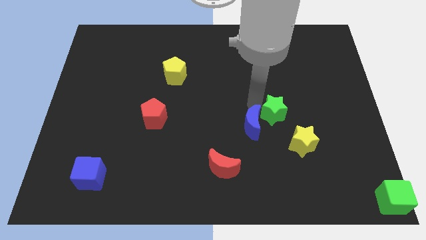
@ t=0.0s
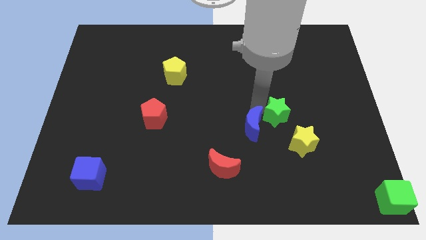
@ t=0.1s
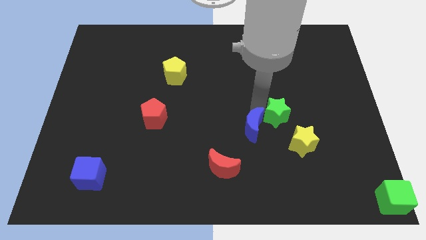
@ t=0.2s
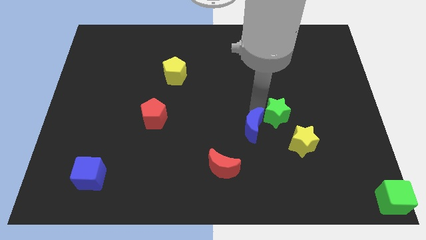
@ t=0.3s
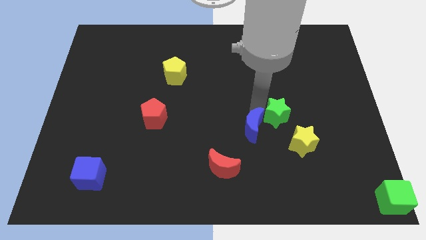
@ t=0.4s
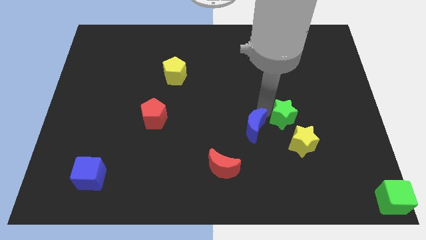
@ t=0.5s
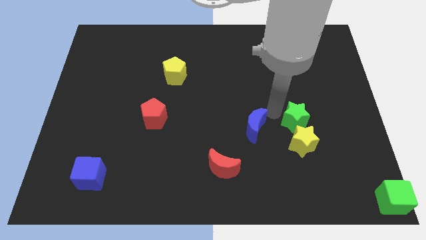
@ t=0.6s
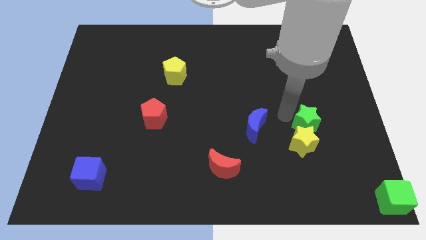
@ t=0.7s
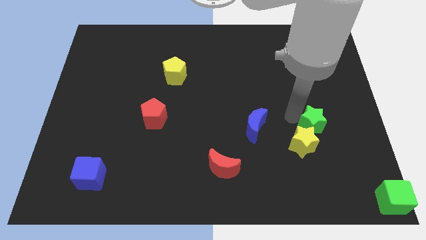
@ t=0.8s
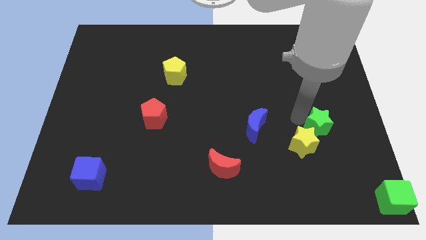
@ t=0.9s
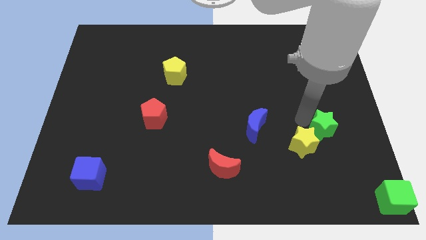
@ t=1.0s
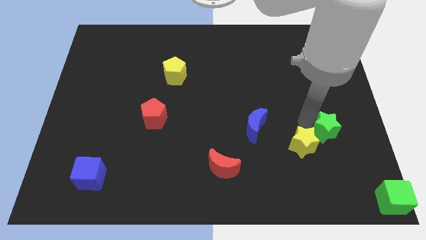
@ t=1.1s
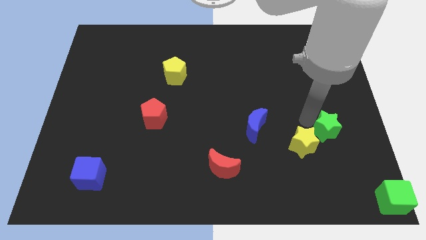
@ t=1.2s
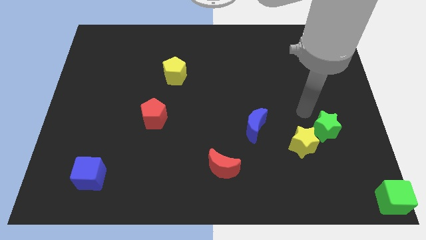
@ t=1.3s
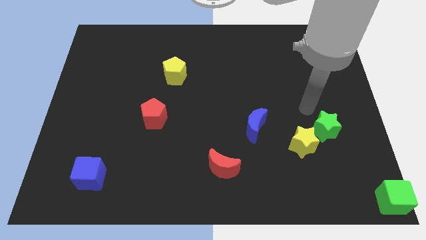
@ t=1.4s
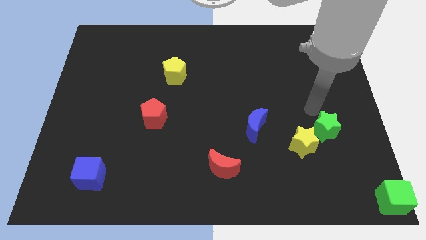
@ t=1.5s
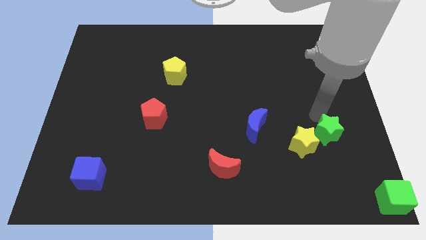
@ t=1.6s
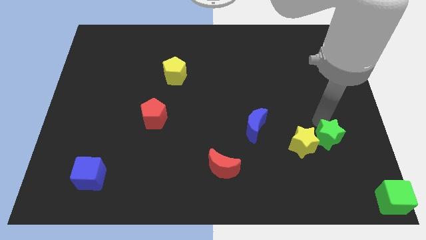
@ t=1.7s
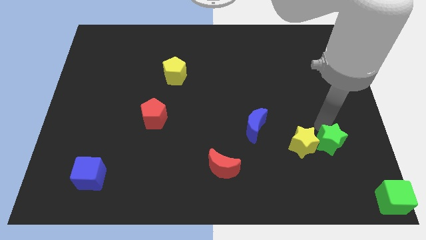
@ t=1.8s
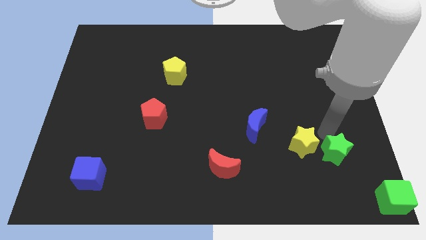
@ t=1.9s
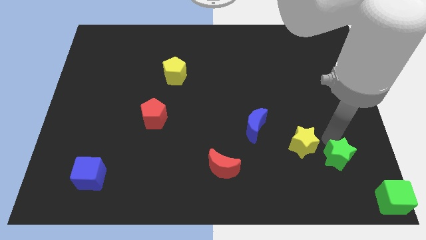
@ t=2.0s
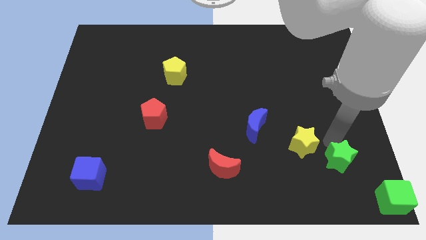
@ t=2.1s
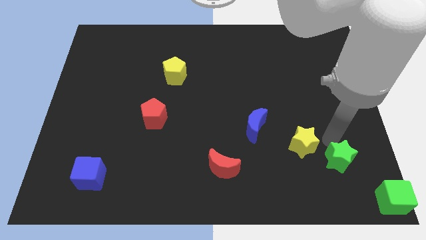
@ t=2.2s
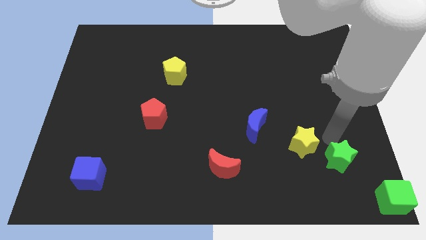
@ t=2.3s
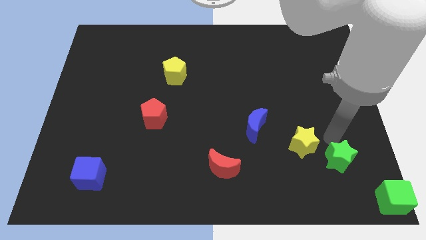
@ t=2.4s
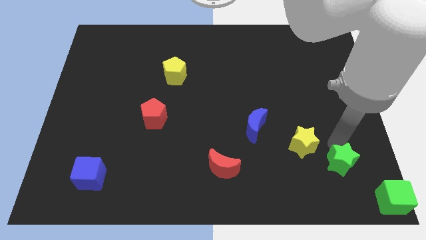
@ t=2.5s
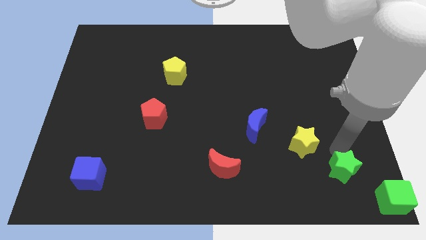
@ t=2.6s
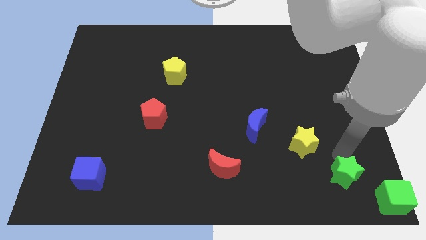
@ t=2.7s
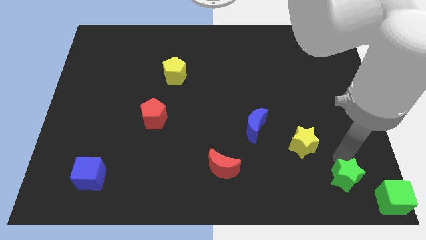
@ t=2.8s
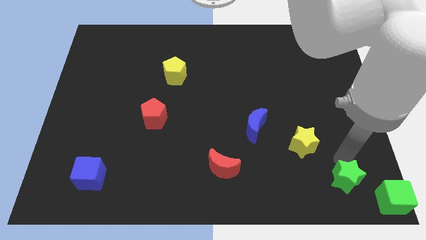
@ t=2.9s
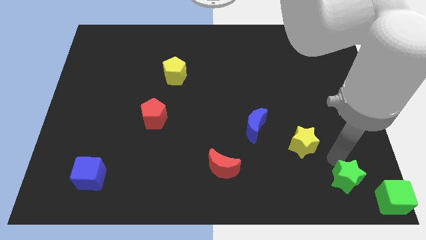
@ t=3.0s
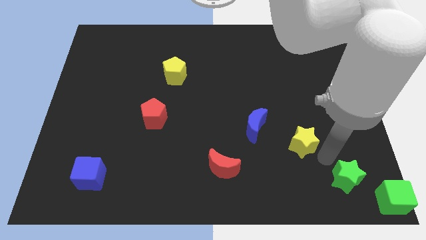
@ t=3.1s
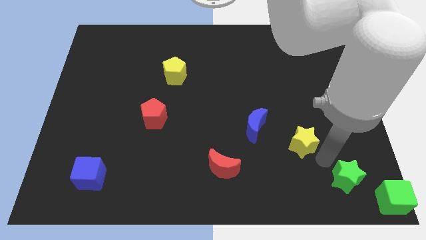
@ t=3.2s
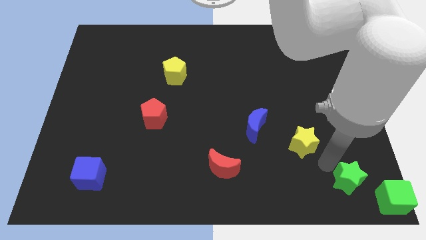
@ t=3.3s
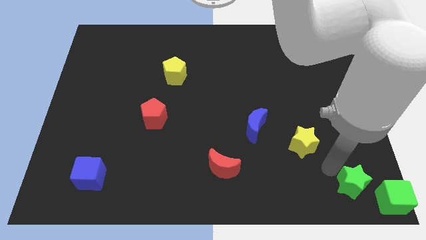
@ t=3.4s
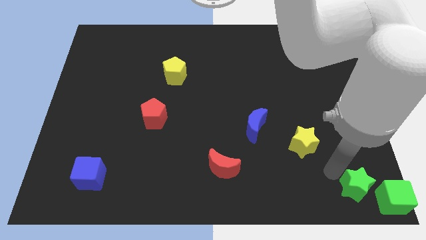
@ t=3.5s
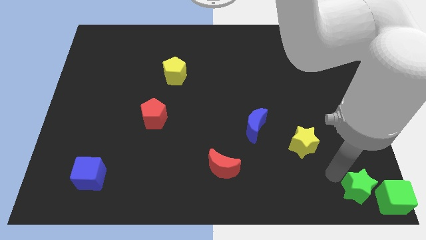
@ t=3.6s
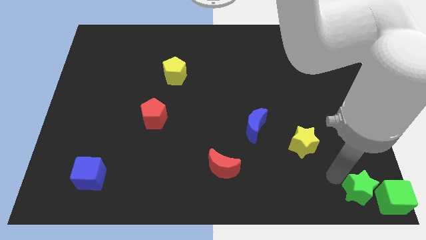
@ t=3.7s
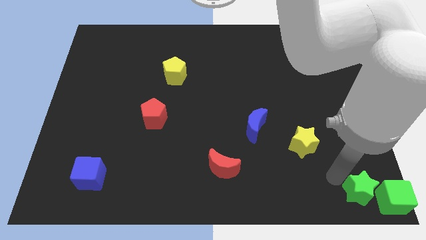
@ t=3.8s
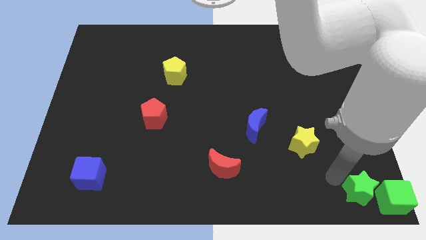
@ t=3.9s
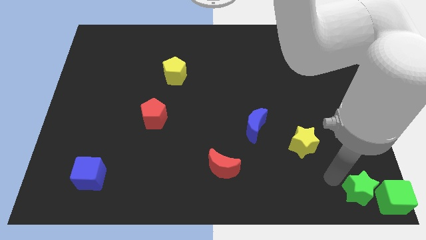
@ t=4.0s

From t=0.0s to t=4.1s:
drag green star beside blue cube

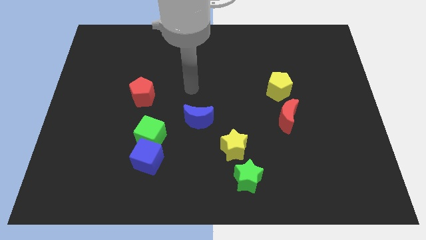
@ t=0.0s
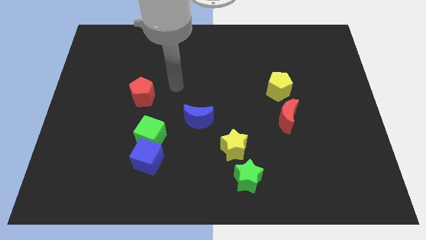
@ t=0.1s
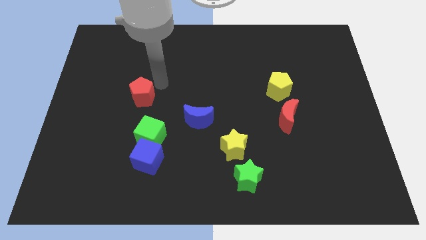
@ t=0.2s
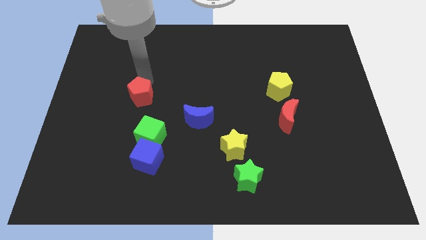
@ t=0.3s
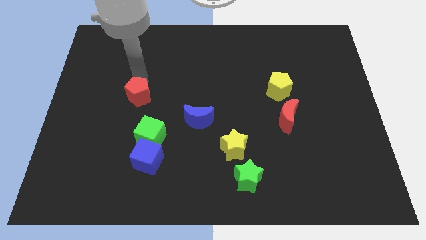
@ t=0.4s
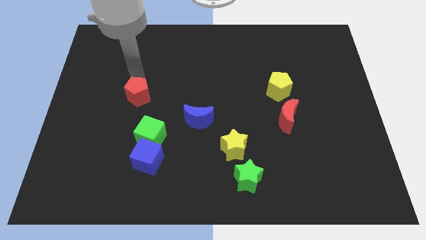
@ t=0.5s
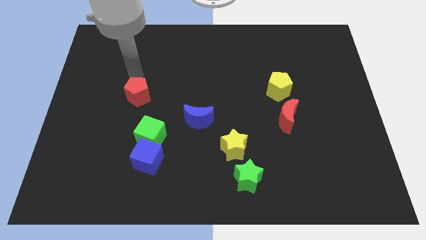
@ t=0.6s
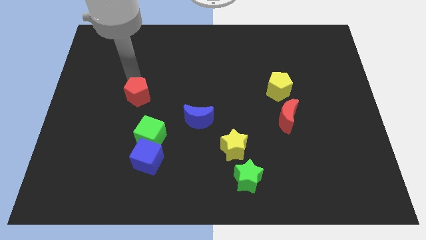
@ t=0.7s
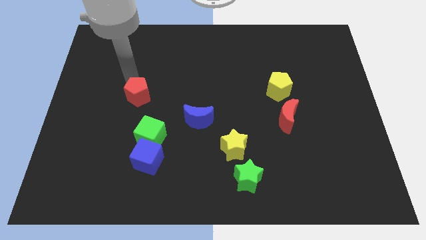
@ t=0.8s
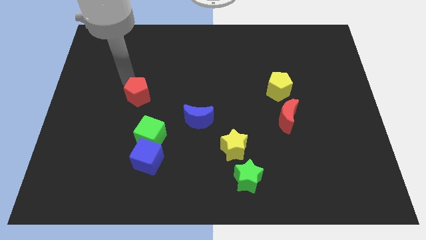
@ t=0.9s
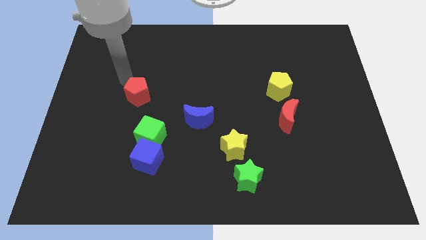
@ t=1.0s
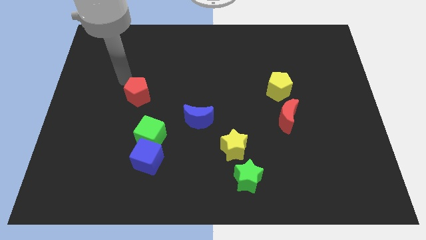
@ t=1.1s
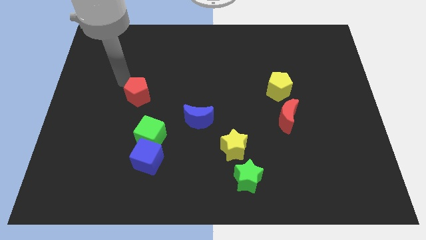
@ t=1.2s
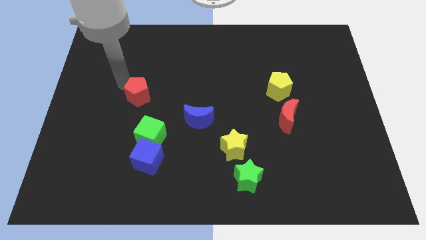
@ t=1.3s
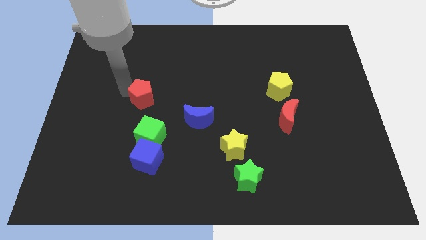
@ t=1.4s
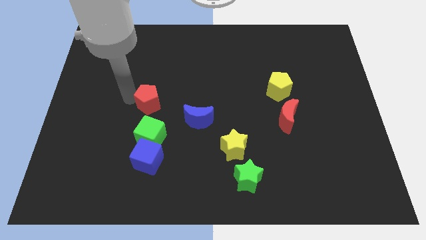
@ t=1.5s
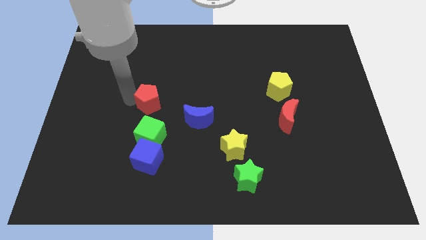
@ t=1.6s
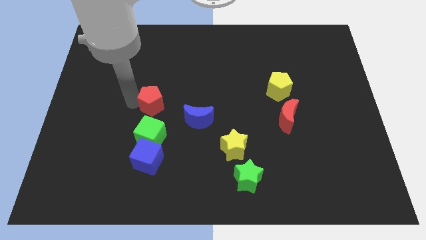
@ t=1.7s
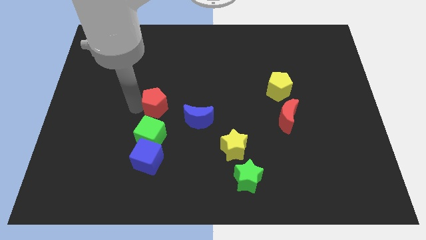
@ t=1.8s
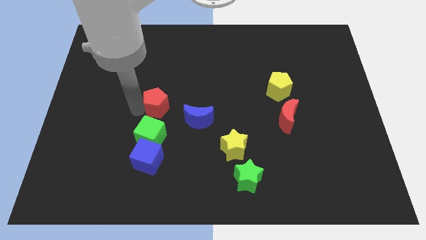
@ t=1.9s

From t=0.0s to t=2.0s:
push the red pentagon into the green cube

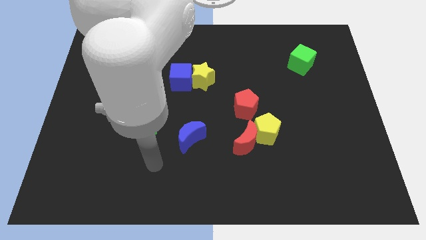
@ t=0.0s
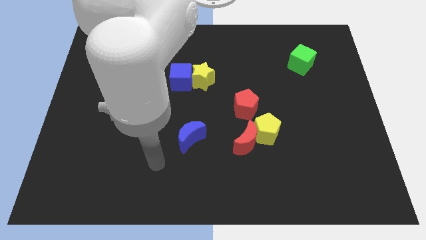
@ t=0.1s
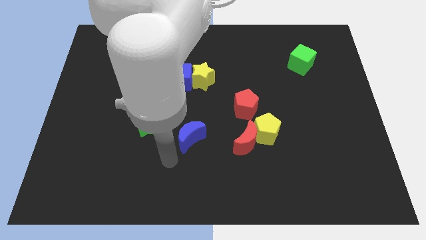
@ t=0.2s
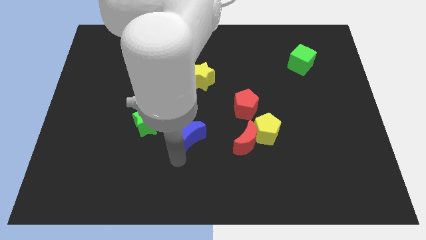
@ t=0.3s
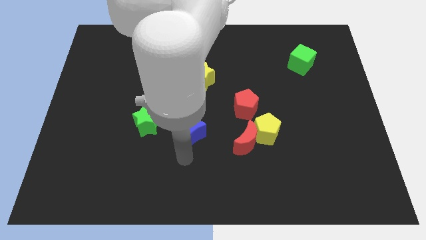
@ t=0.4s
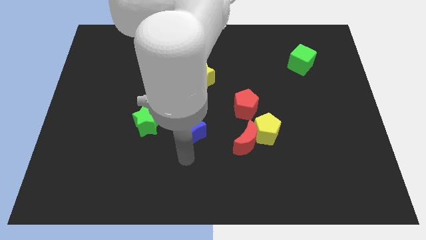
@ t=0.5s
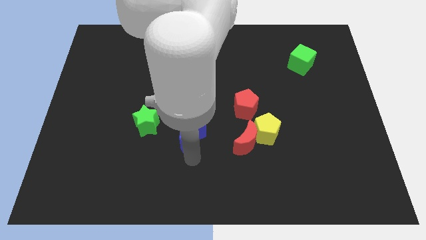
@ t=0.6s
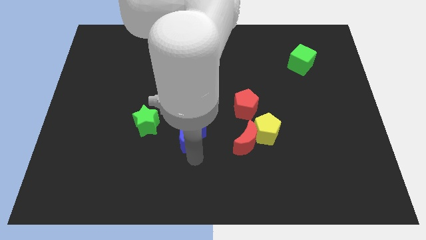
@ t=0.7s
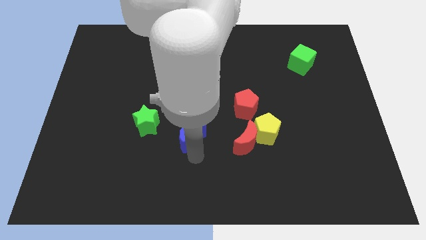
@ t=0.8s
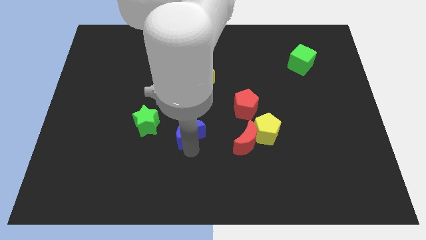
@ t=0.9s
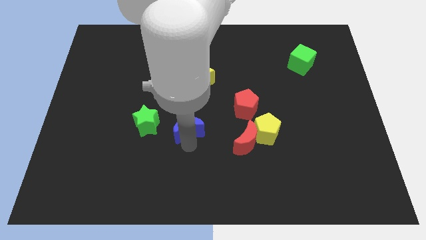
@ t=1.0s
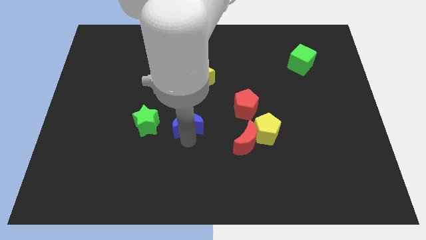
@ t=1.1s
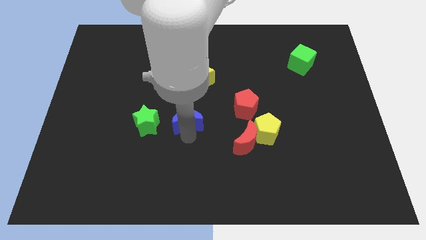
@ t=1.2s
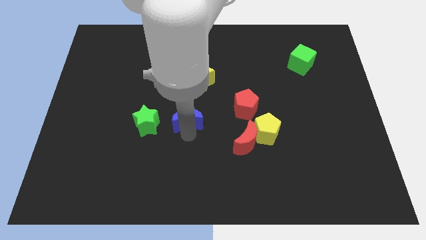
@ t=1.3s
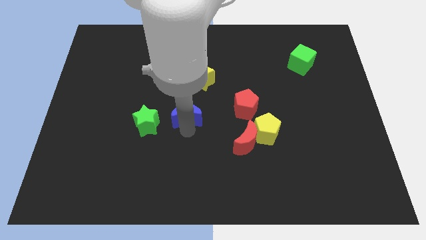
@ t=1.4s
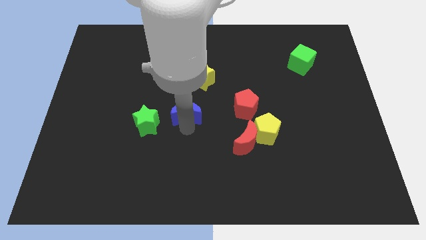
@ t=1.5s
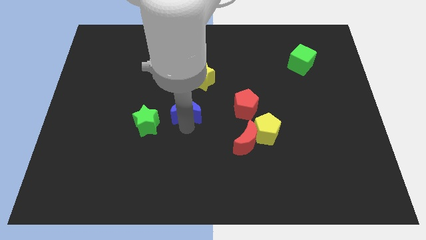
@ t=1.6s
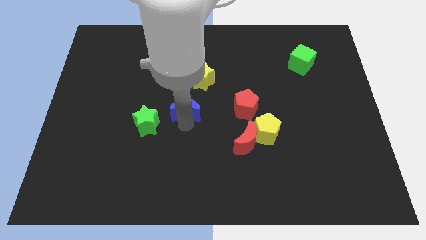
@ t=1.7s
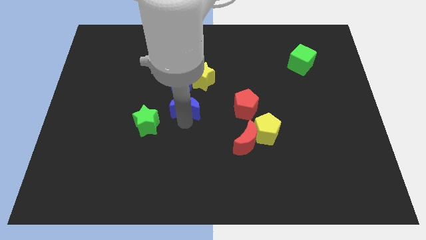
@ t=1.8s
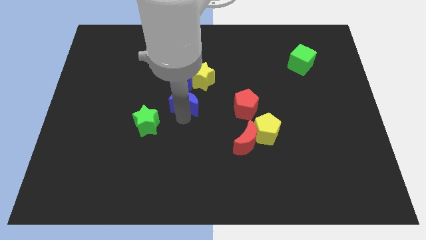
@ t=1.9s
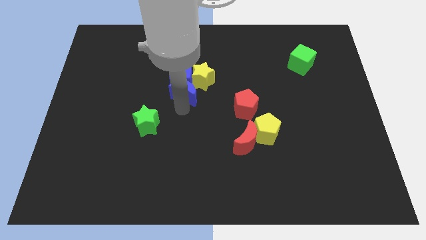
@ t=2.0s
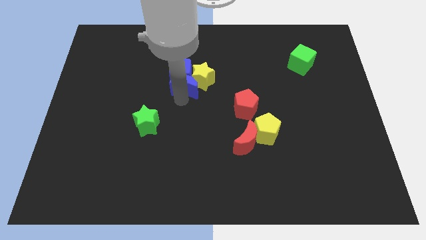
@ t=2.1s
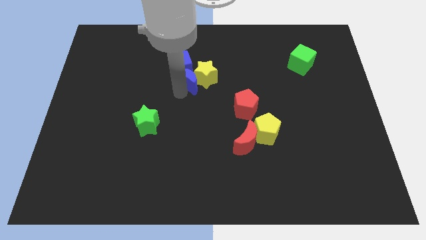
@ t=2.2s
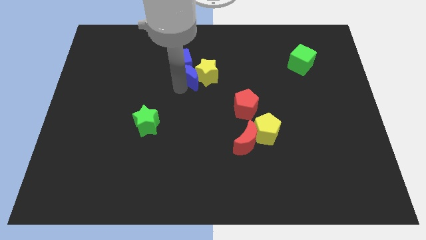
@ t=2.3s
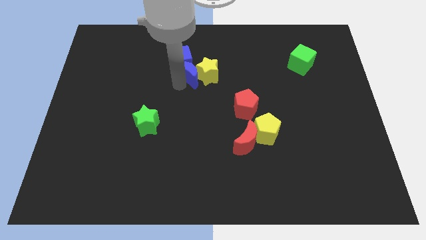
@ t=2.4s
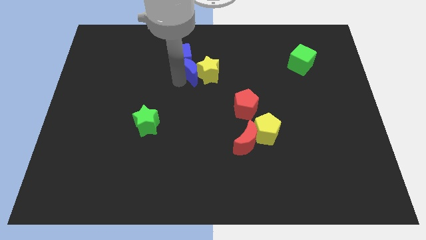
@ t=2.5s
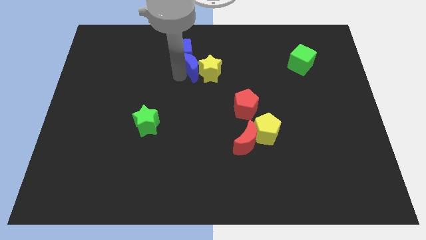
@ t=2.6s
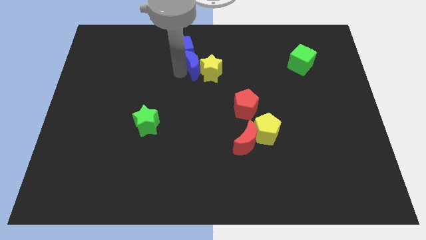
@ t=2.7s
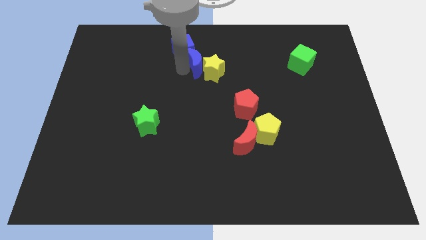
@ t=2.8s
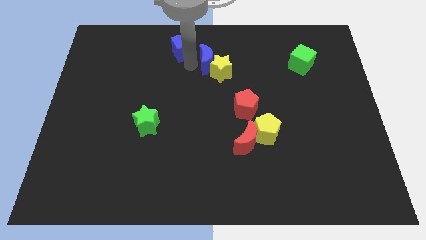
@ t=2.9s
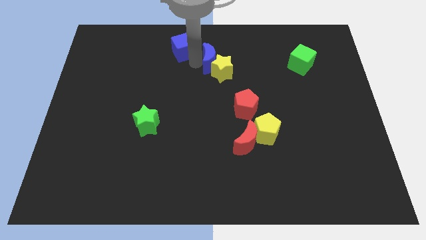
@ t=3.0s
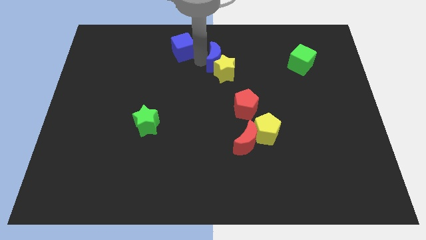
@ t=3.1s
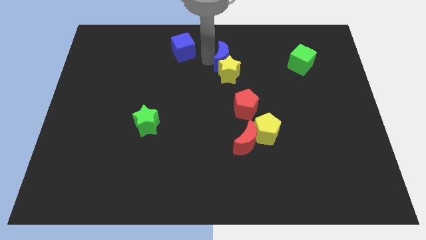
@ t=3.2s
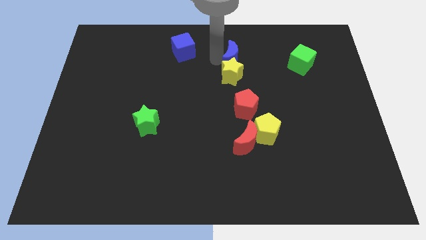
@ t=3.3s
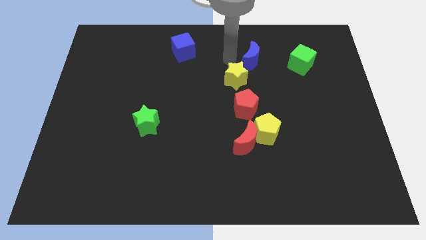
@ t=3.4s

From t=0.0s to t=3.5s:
push the blue moon into the yellow star
